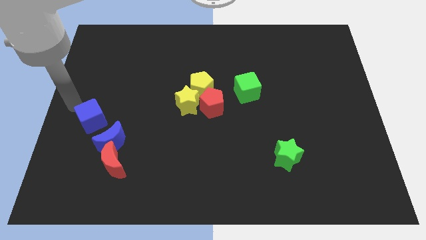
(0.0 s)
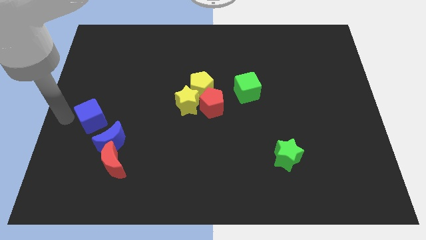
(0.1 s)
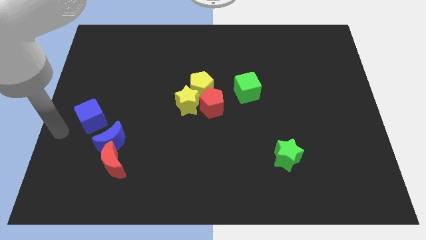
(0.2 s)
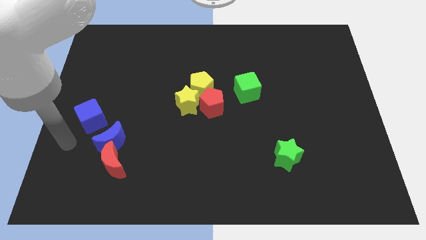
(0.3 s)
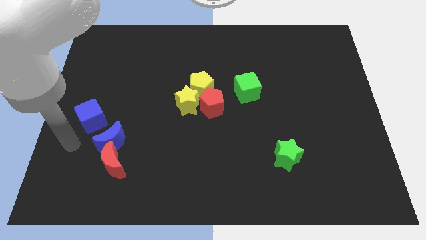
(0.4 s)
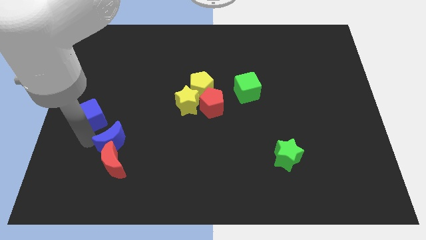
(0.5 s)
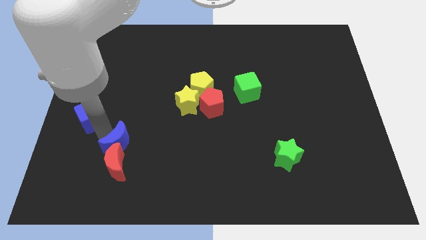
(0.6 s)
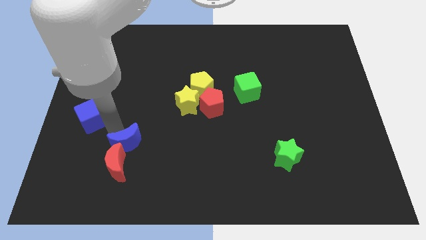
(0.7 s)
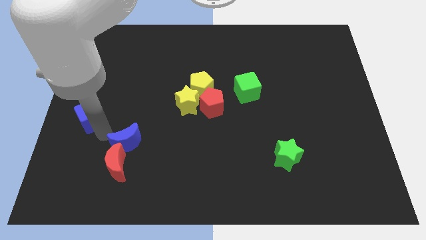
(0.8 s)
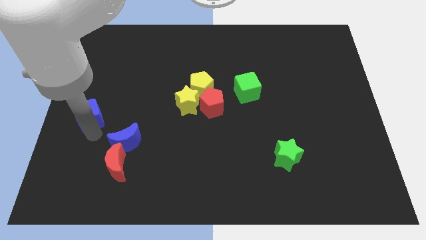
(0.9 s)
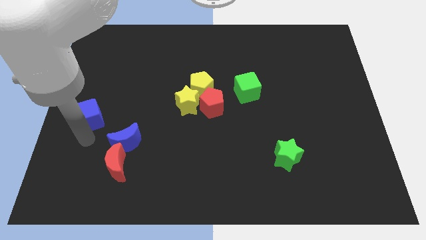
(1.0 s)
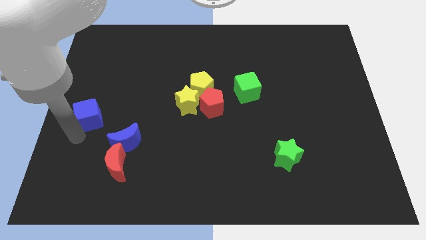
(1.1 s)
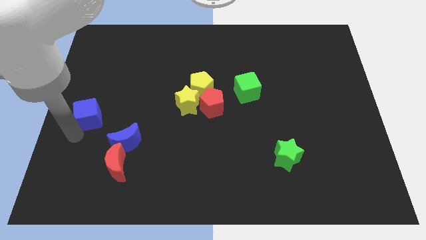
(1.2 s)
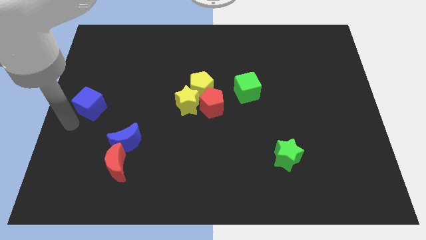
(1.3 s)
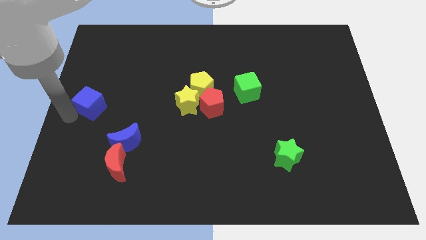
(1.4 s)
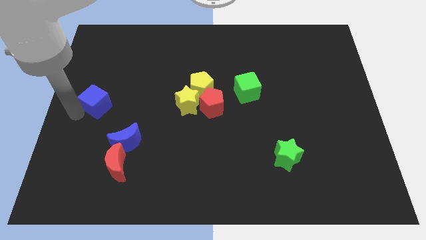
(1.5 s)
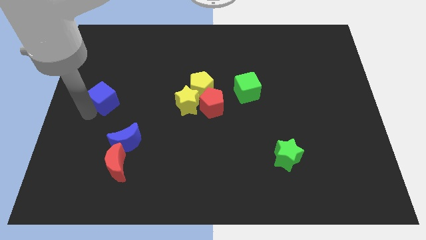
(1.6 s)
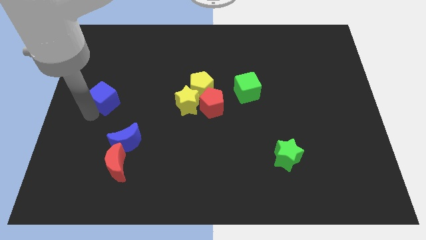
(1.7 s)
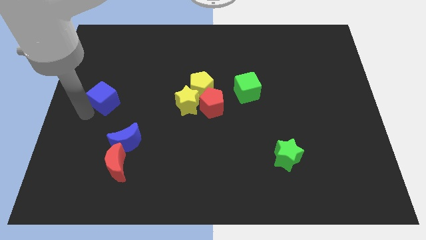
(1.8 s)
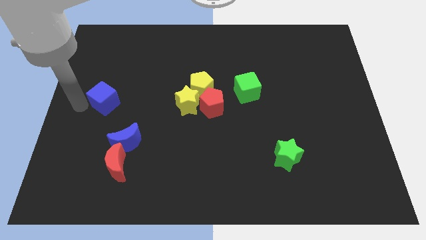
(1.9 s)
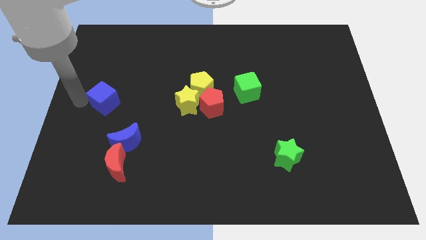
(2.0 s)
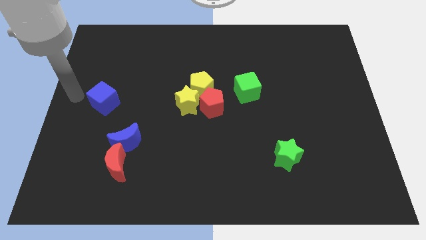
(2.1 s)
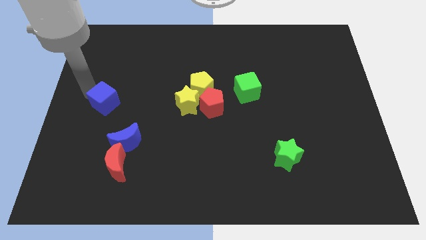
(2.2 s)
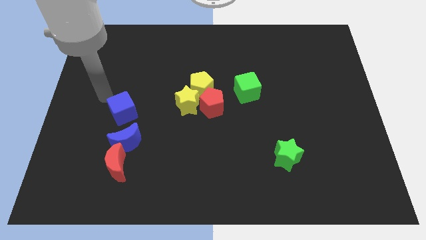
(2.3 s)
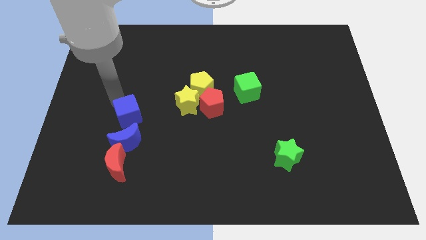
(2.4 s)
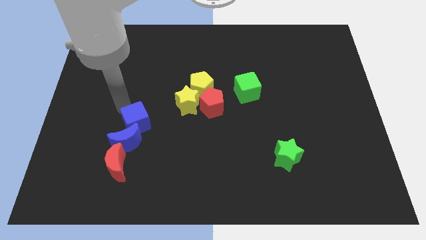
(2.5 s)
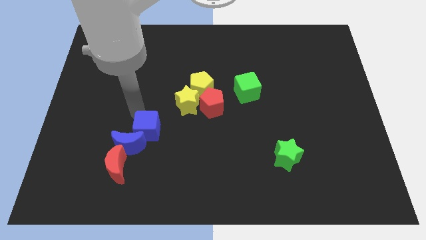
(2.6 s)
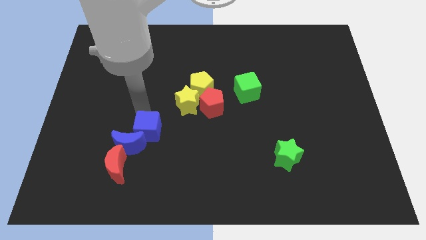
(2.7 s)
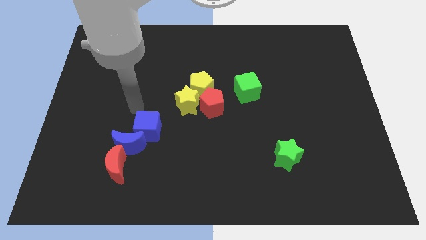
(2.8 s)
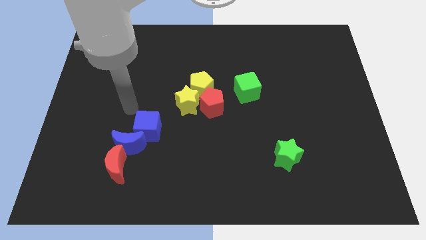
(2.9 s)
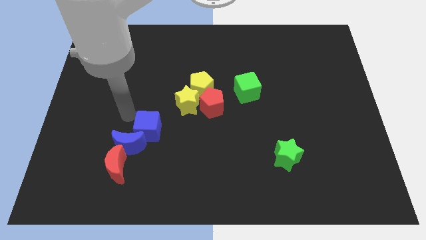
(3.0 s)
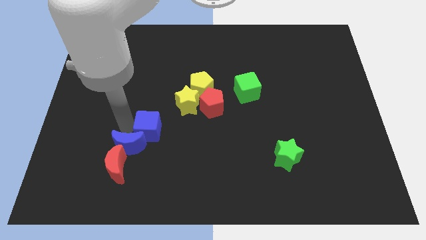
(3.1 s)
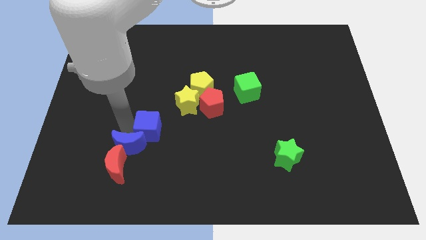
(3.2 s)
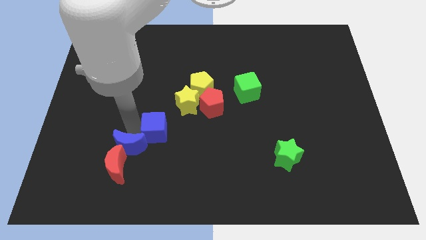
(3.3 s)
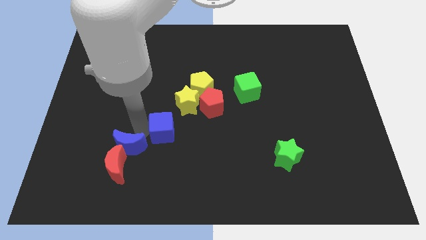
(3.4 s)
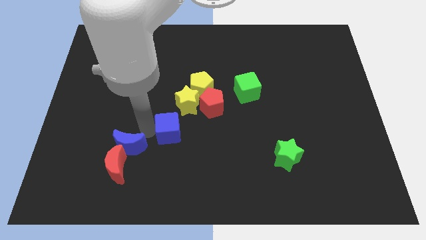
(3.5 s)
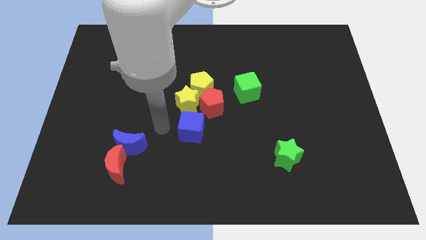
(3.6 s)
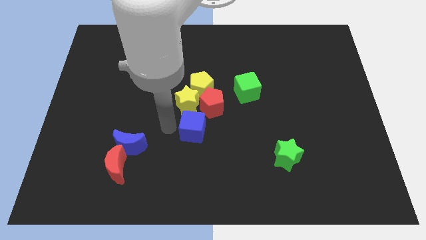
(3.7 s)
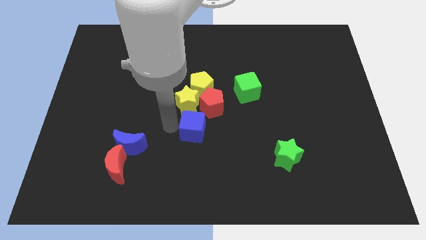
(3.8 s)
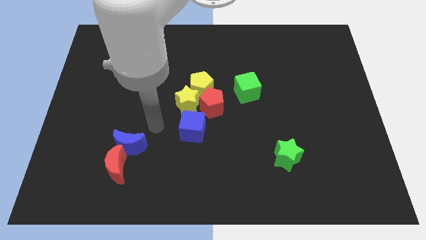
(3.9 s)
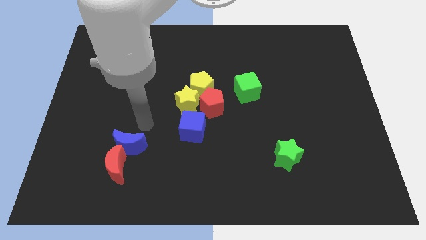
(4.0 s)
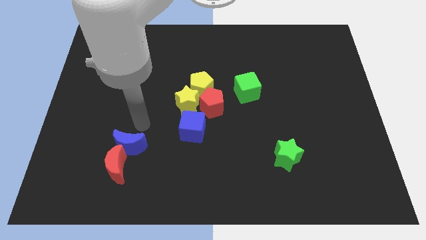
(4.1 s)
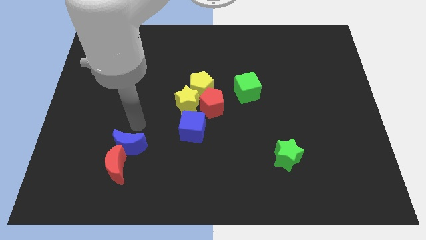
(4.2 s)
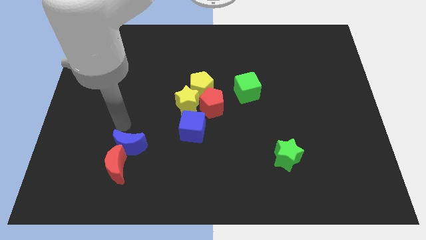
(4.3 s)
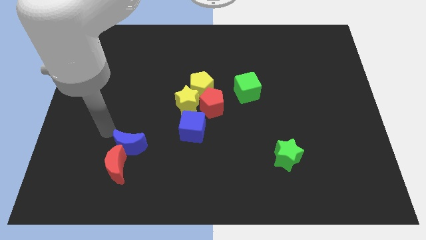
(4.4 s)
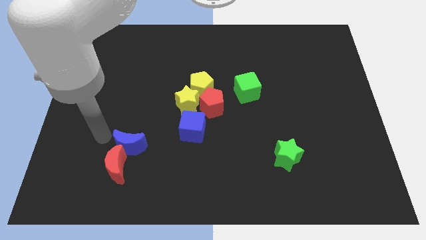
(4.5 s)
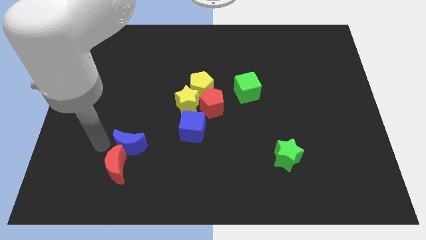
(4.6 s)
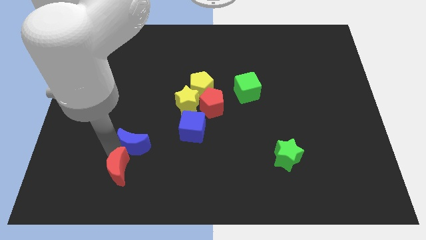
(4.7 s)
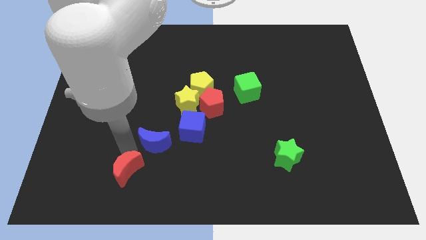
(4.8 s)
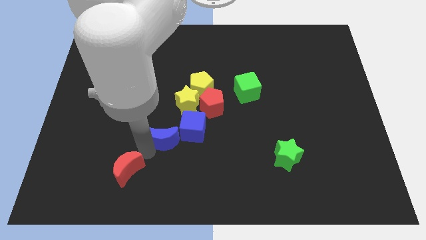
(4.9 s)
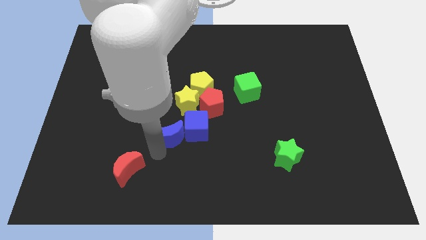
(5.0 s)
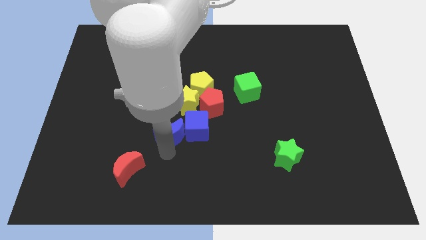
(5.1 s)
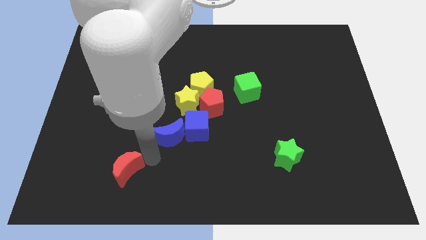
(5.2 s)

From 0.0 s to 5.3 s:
move the blue blocks to the group of blocks

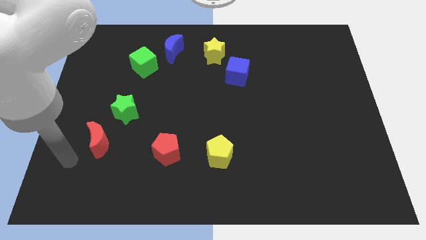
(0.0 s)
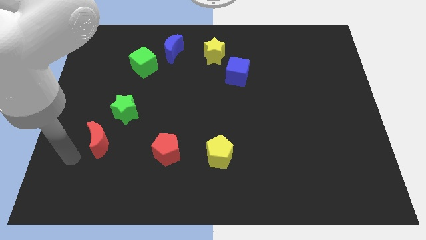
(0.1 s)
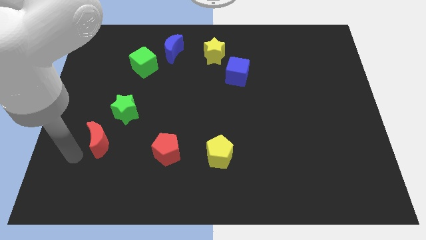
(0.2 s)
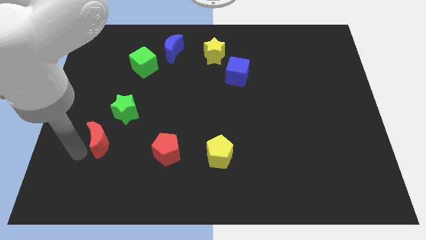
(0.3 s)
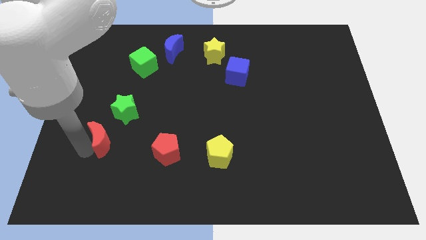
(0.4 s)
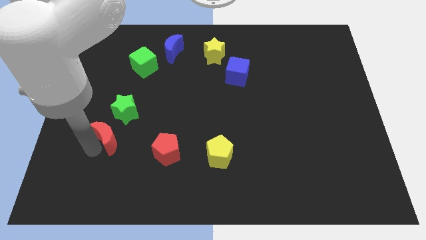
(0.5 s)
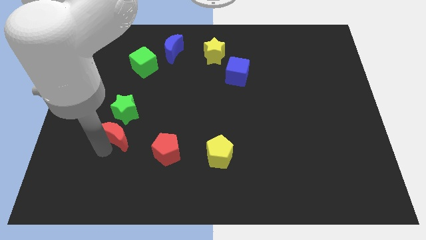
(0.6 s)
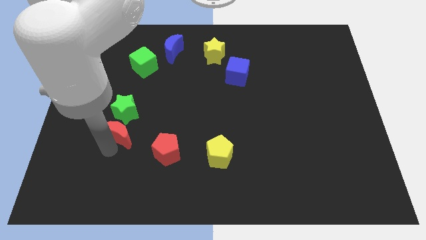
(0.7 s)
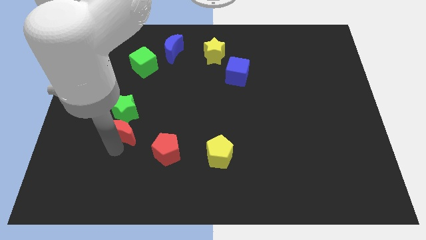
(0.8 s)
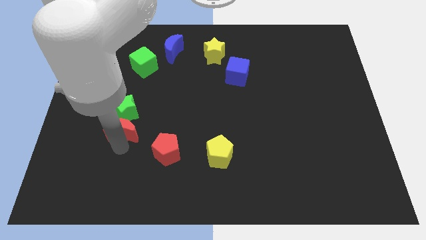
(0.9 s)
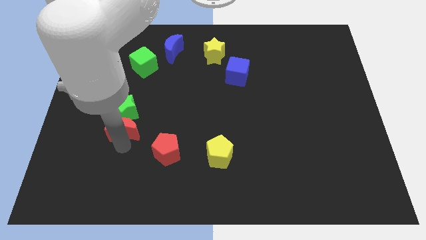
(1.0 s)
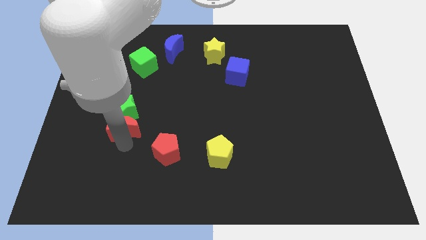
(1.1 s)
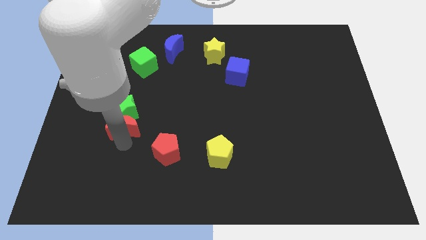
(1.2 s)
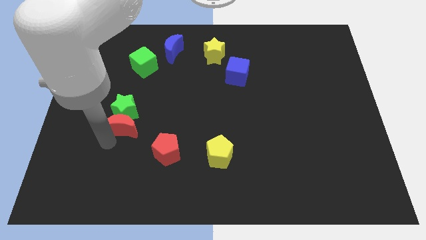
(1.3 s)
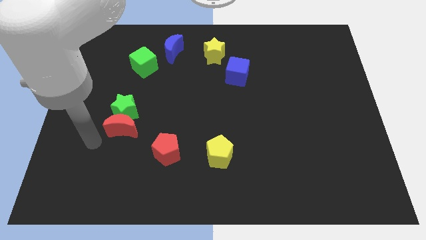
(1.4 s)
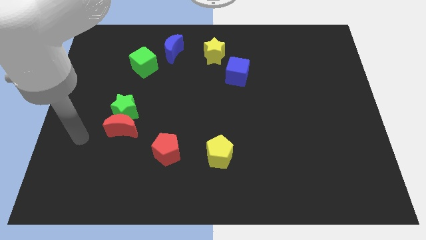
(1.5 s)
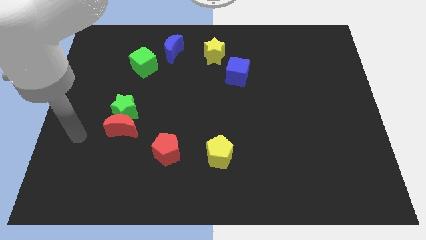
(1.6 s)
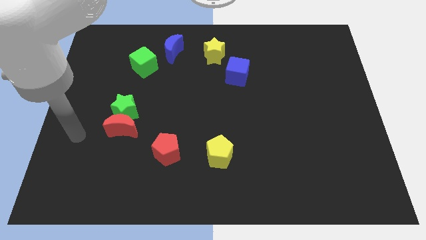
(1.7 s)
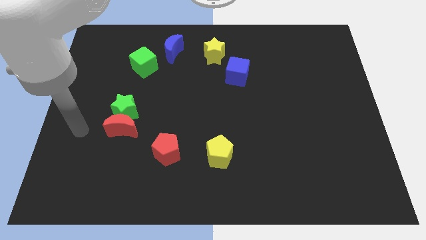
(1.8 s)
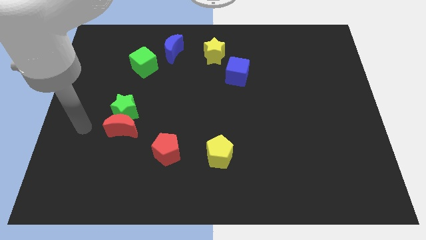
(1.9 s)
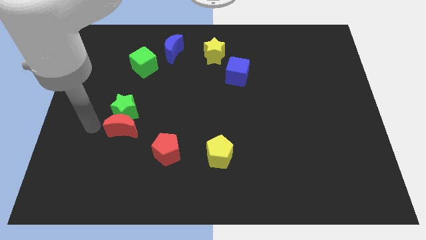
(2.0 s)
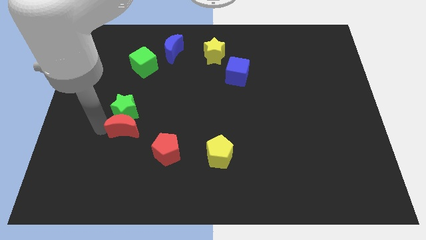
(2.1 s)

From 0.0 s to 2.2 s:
move red moon into green star

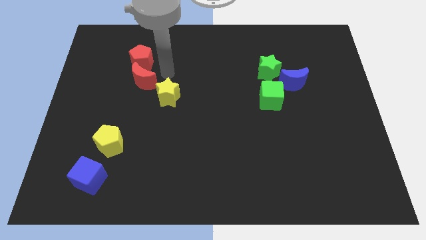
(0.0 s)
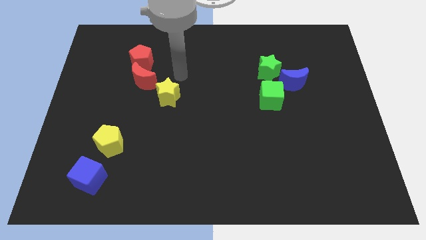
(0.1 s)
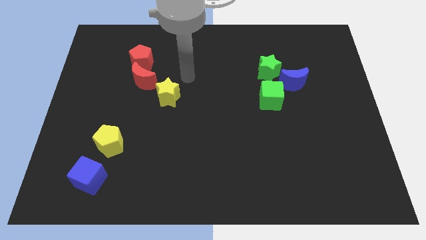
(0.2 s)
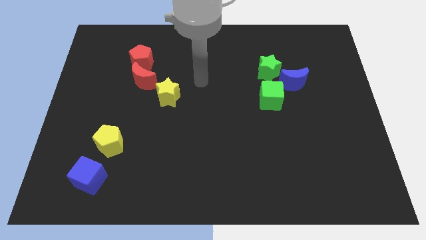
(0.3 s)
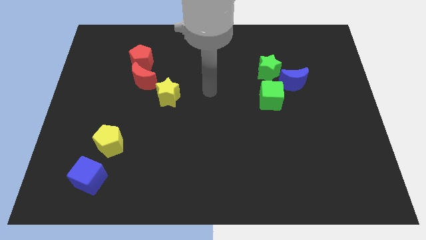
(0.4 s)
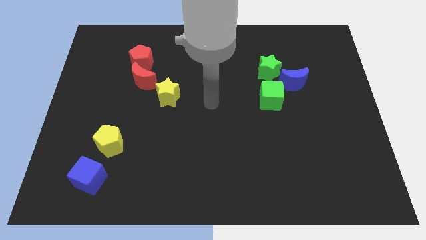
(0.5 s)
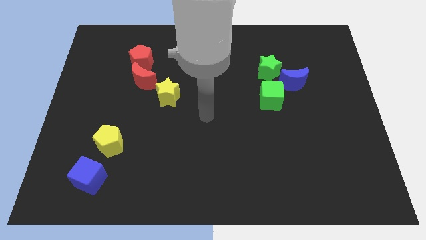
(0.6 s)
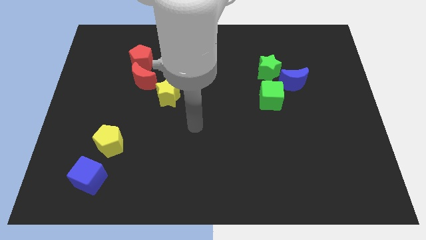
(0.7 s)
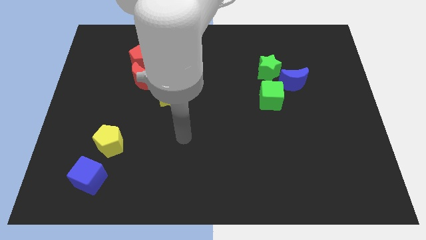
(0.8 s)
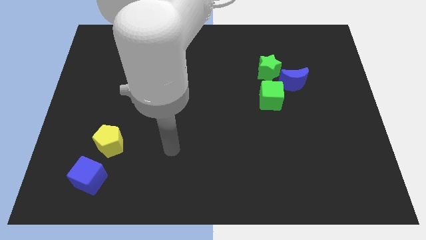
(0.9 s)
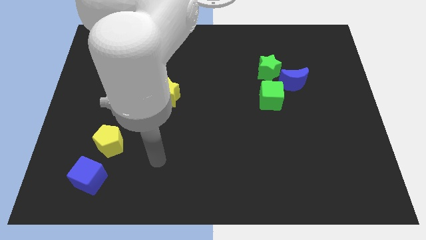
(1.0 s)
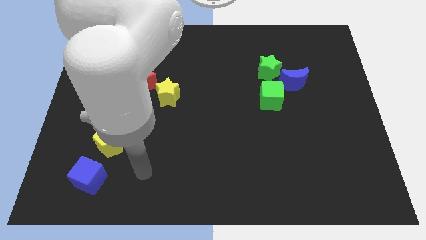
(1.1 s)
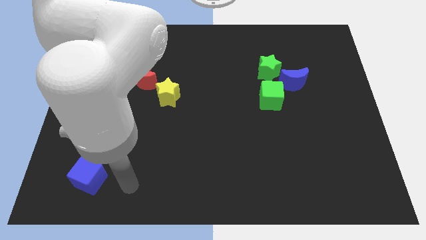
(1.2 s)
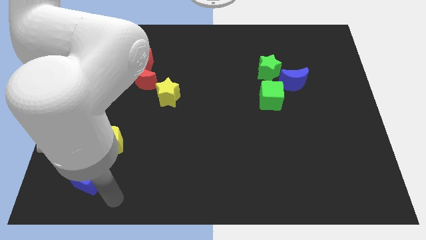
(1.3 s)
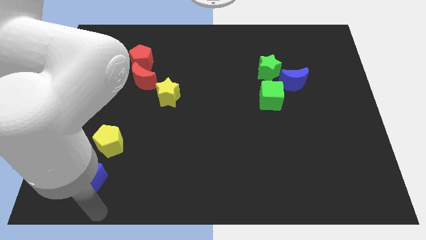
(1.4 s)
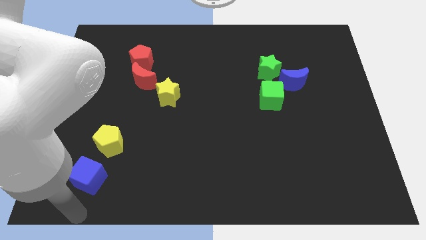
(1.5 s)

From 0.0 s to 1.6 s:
point your hand below the blue cube

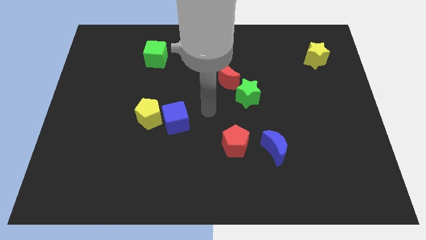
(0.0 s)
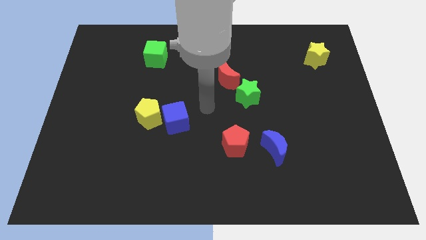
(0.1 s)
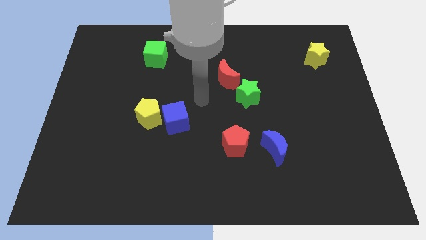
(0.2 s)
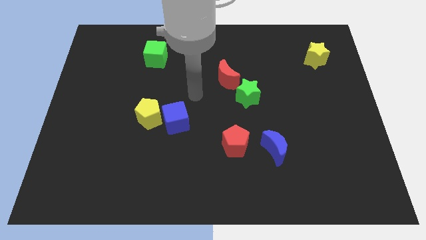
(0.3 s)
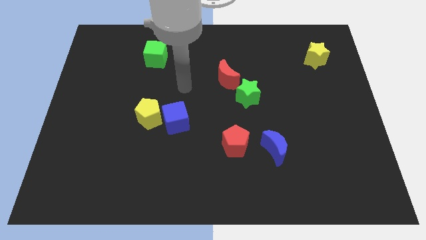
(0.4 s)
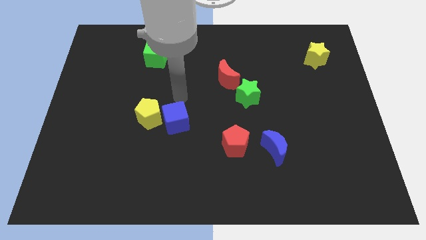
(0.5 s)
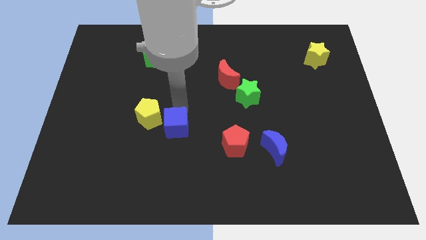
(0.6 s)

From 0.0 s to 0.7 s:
place arm at the top of blue cube
